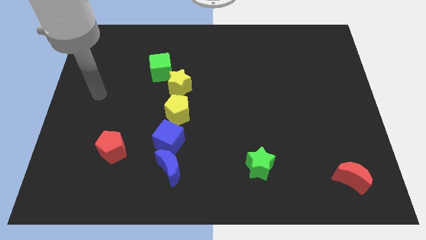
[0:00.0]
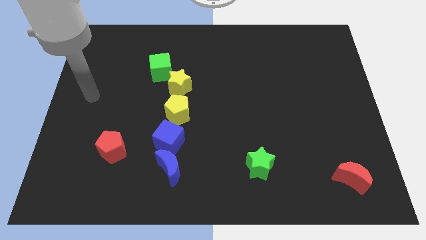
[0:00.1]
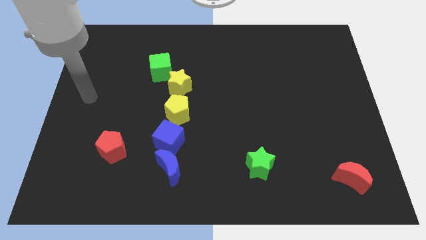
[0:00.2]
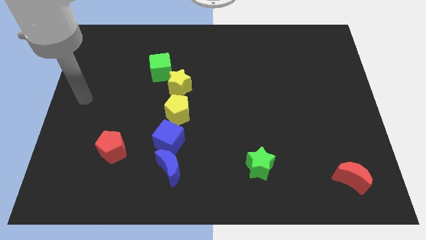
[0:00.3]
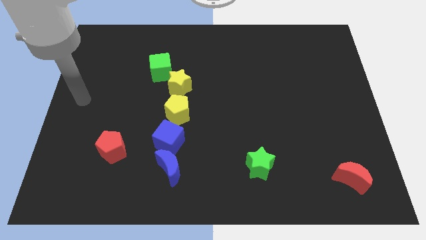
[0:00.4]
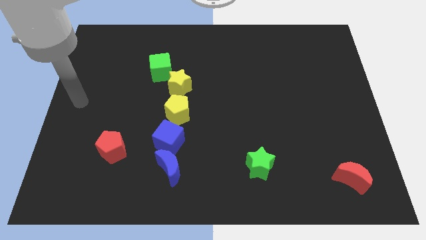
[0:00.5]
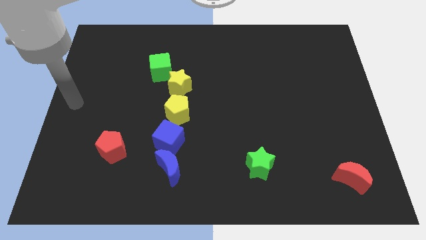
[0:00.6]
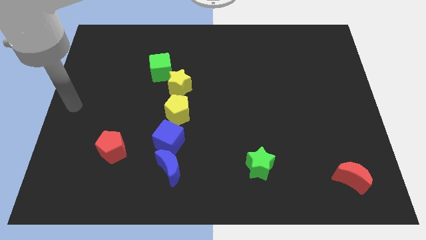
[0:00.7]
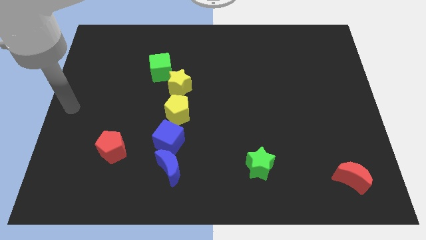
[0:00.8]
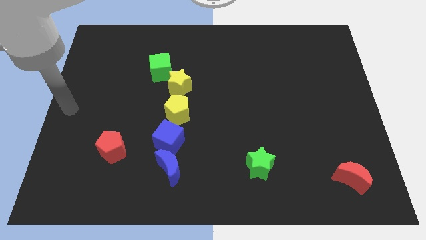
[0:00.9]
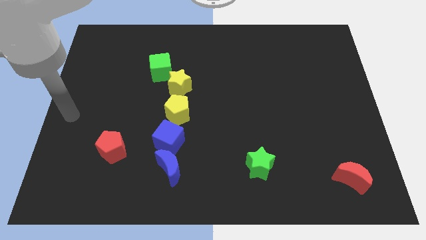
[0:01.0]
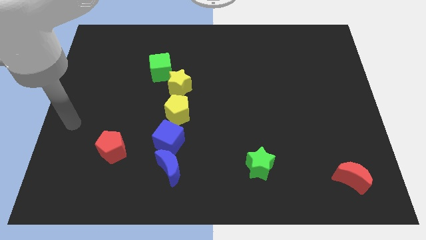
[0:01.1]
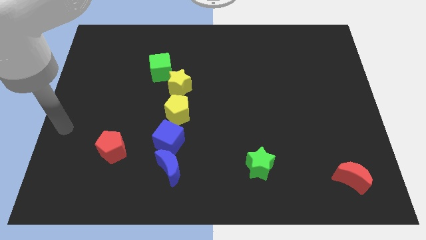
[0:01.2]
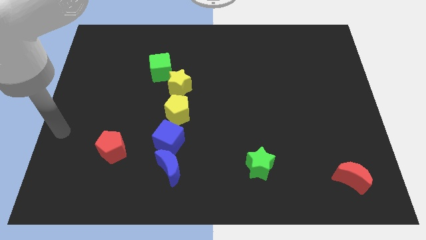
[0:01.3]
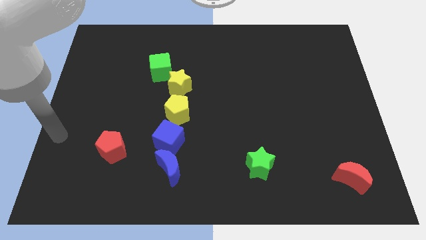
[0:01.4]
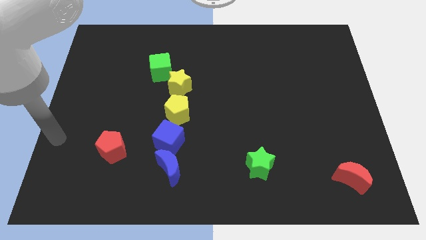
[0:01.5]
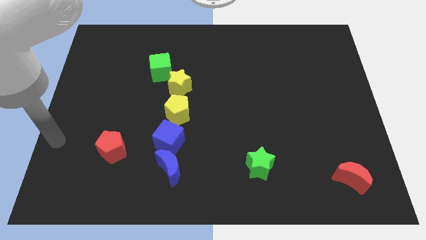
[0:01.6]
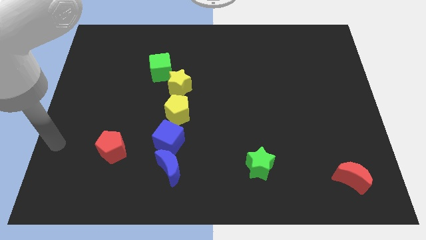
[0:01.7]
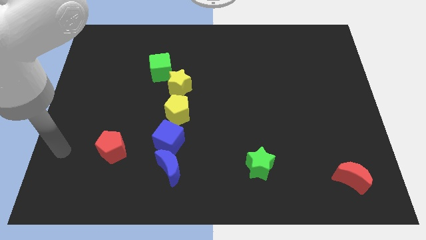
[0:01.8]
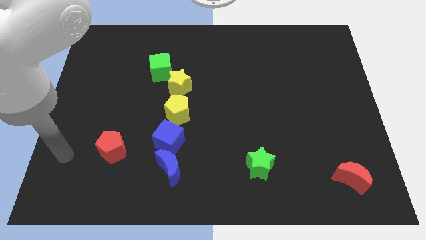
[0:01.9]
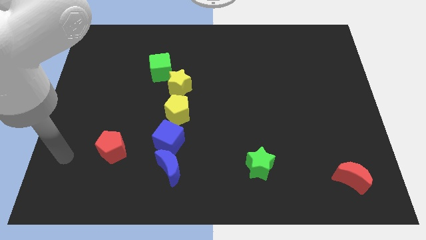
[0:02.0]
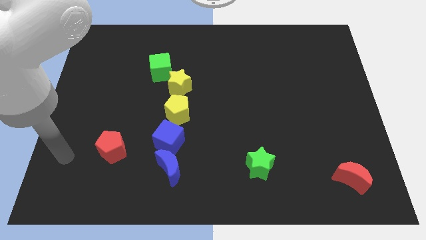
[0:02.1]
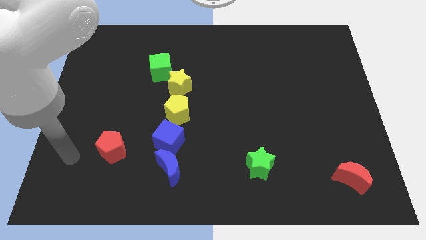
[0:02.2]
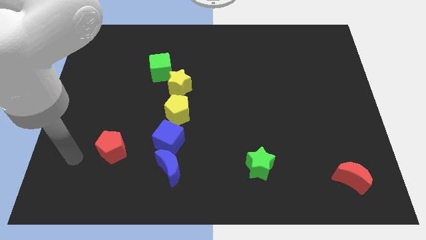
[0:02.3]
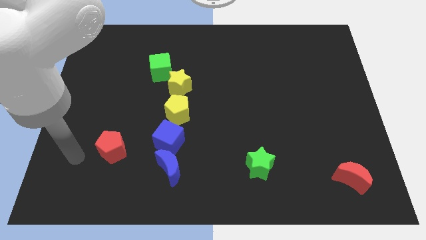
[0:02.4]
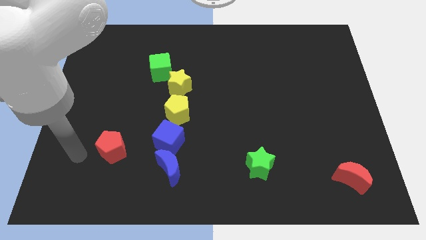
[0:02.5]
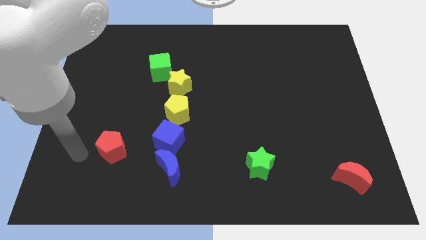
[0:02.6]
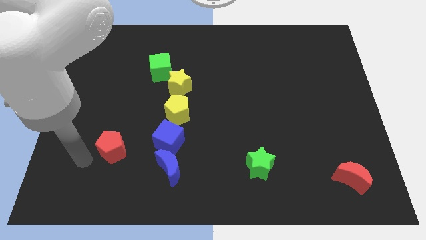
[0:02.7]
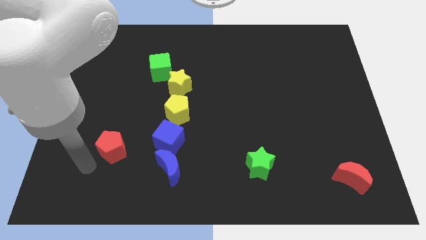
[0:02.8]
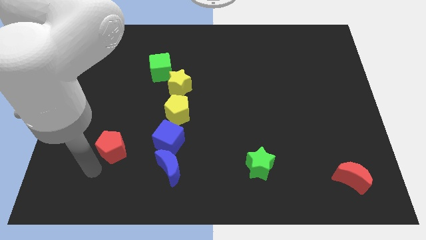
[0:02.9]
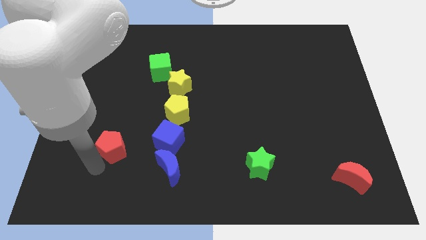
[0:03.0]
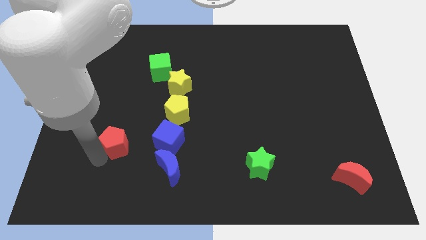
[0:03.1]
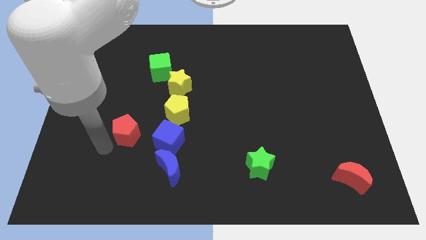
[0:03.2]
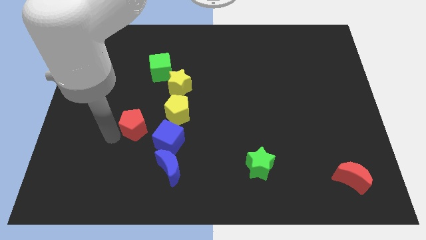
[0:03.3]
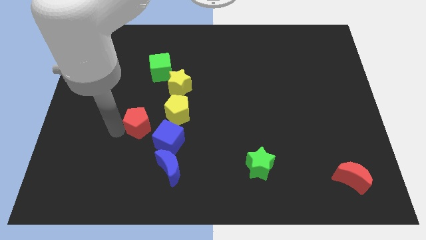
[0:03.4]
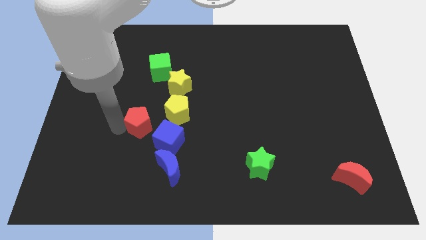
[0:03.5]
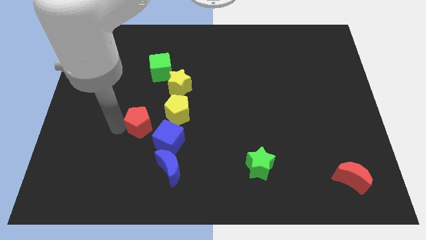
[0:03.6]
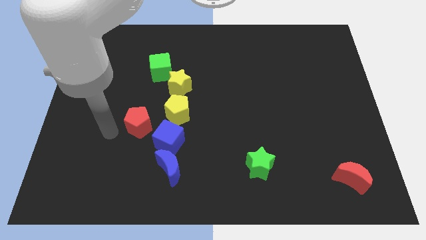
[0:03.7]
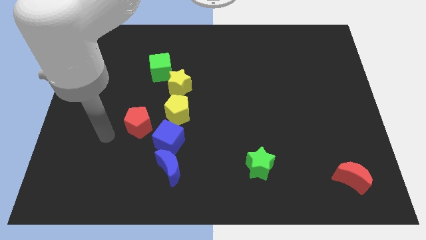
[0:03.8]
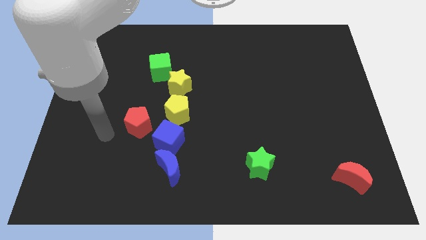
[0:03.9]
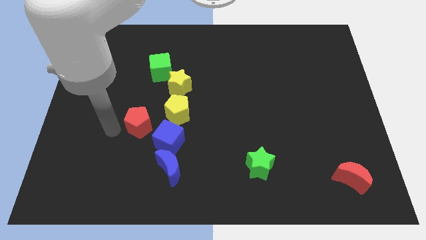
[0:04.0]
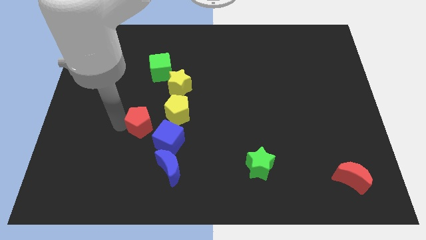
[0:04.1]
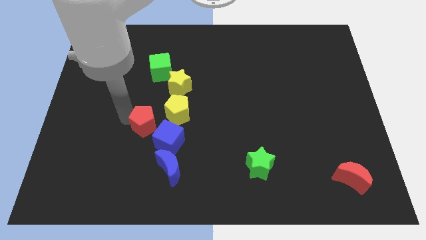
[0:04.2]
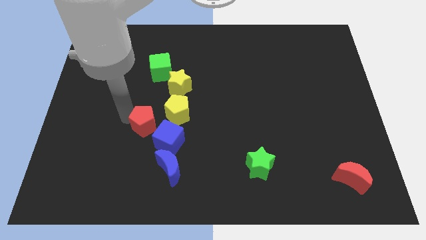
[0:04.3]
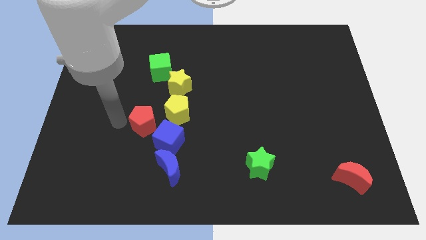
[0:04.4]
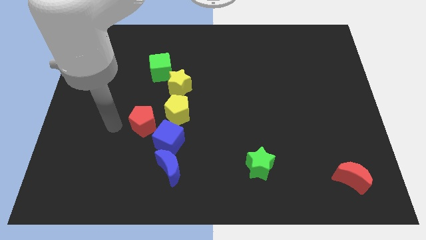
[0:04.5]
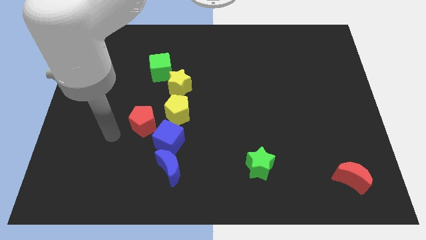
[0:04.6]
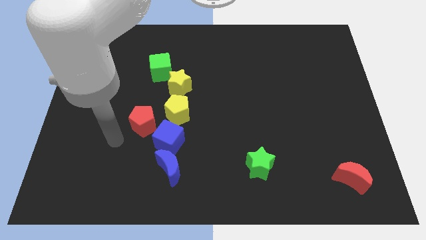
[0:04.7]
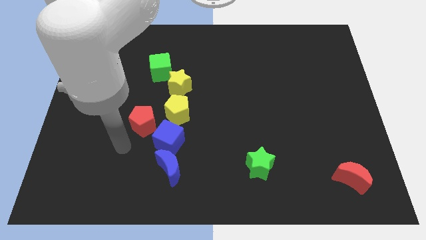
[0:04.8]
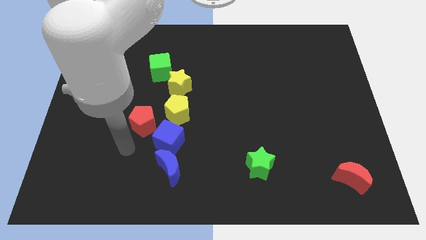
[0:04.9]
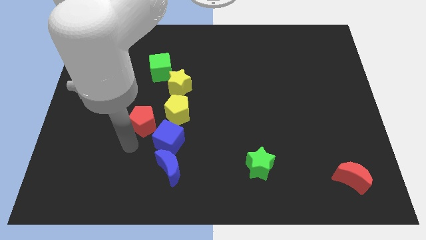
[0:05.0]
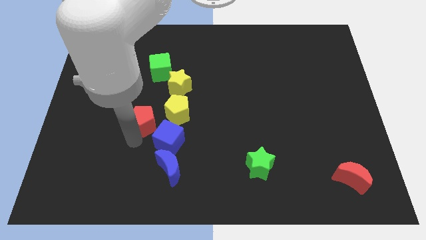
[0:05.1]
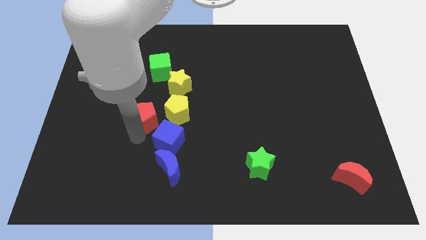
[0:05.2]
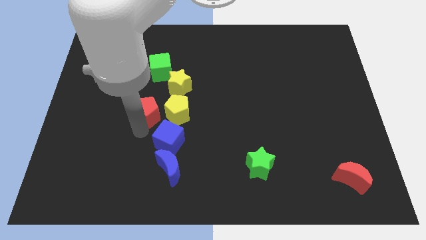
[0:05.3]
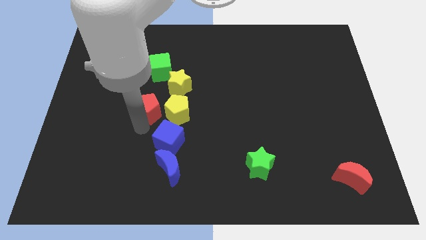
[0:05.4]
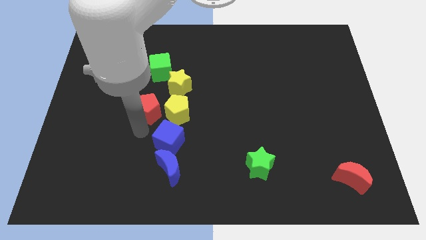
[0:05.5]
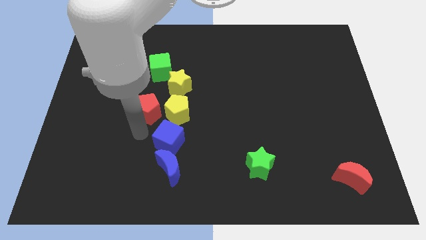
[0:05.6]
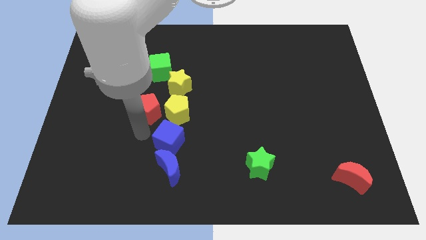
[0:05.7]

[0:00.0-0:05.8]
place the red pentagon left to the yellow pentagon

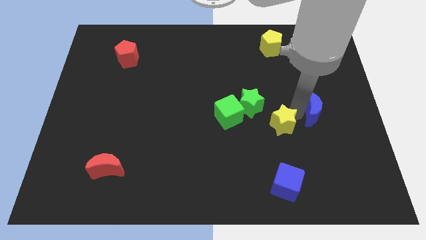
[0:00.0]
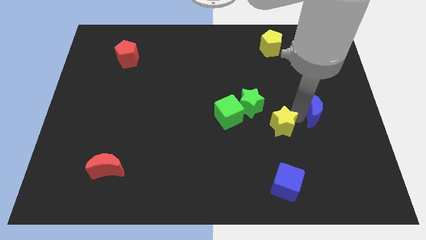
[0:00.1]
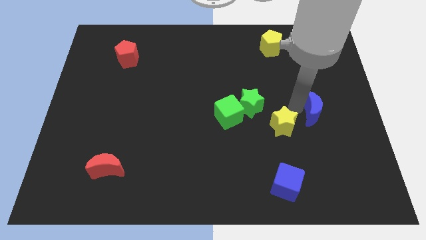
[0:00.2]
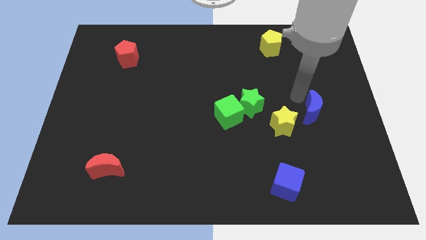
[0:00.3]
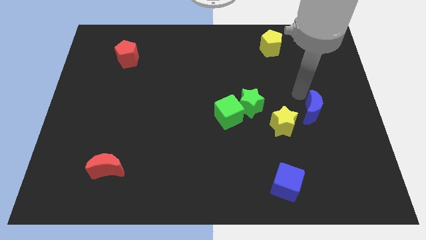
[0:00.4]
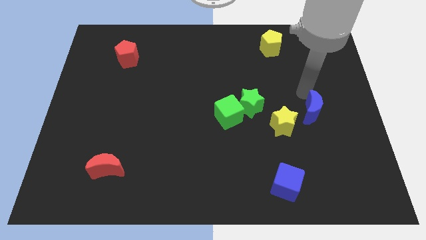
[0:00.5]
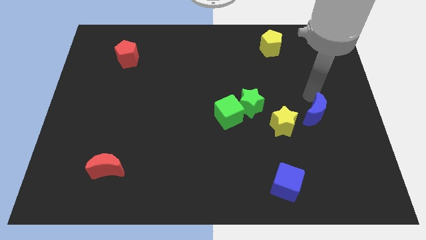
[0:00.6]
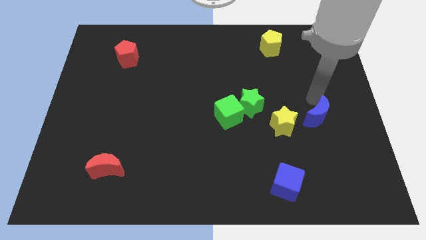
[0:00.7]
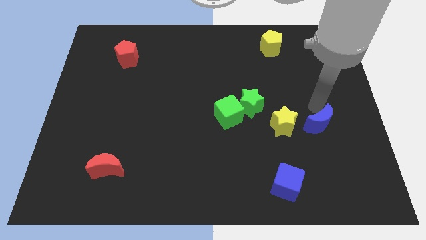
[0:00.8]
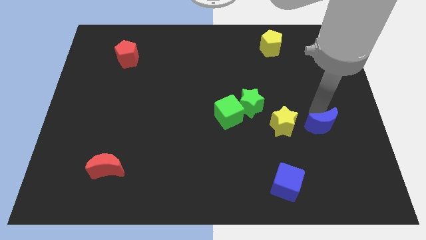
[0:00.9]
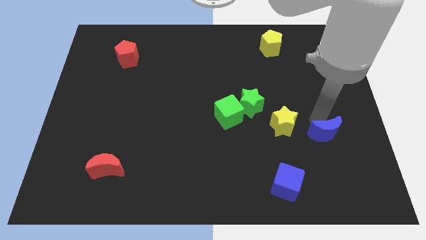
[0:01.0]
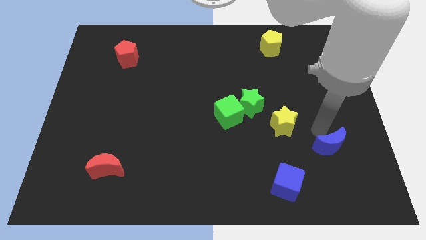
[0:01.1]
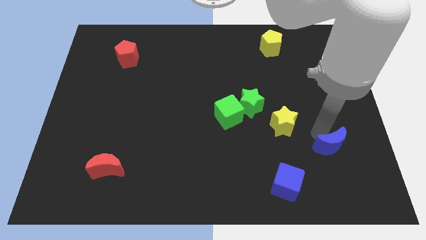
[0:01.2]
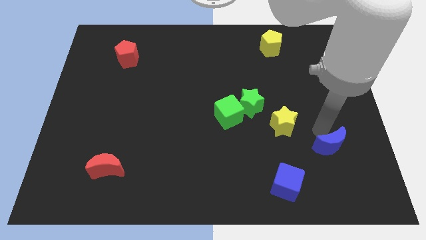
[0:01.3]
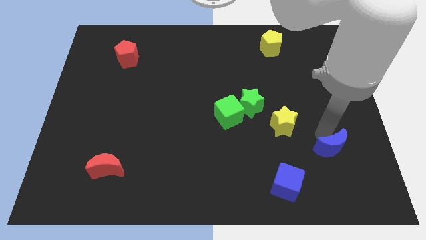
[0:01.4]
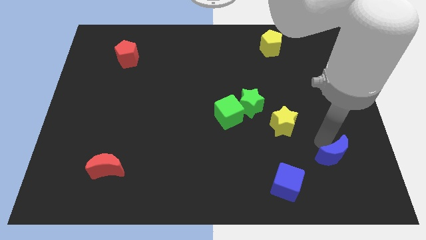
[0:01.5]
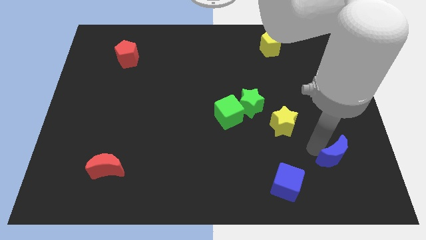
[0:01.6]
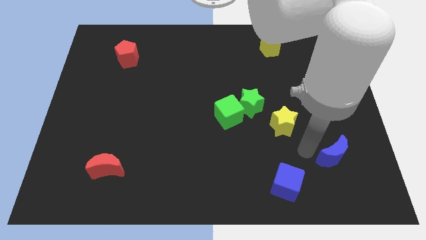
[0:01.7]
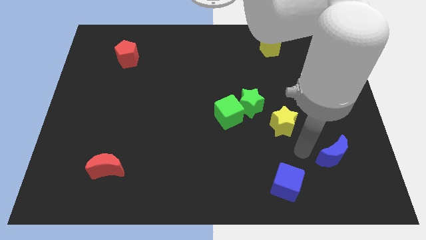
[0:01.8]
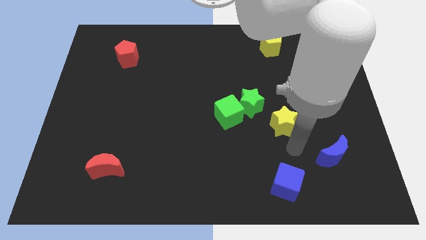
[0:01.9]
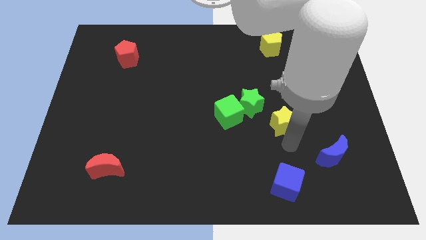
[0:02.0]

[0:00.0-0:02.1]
move blue crescent near to blue cube

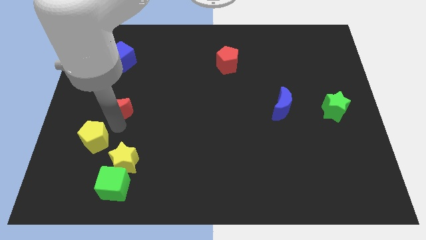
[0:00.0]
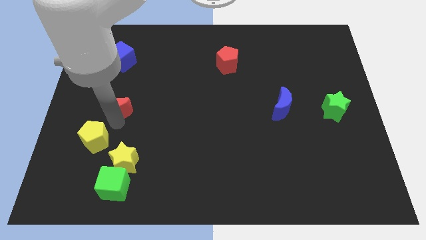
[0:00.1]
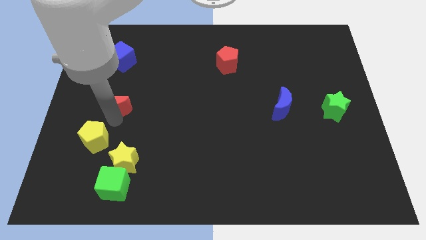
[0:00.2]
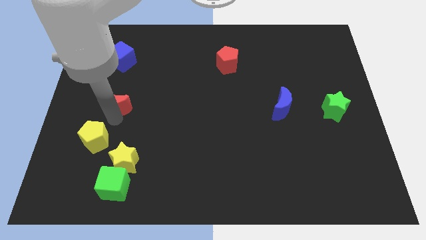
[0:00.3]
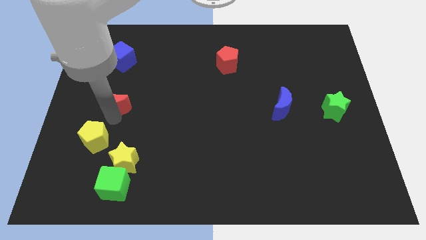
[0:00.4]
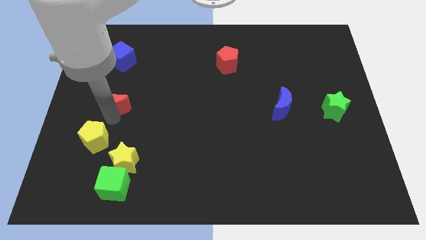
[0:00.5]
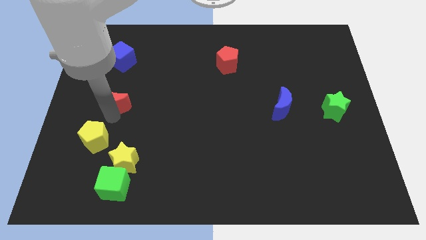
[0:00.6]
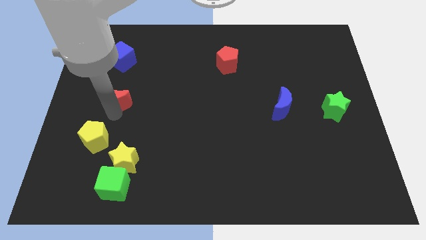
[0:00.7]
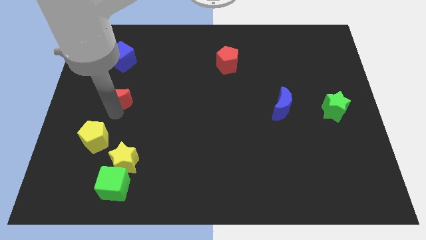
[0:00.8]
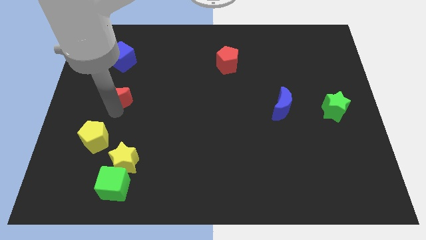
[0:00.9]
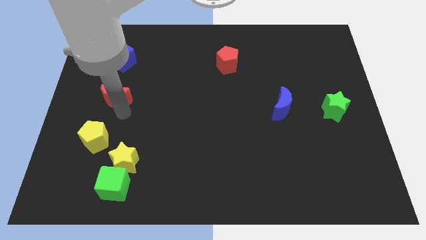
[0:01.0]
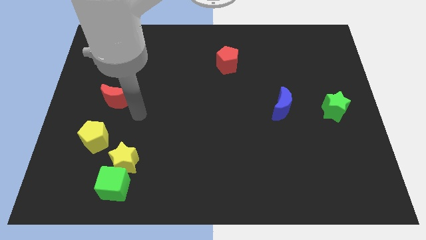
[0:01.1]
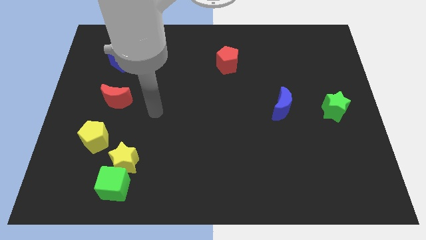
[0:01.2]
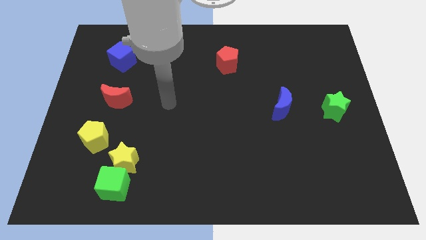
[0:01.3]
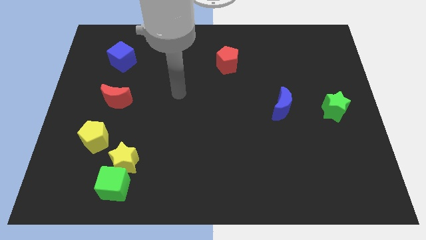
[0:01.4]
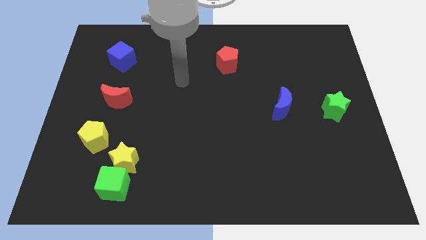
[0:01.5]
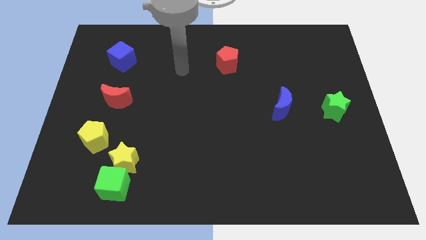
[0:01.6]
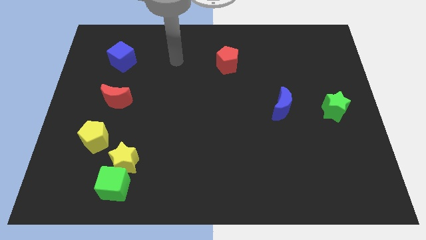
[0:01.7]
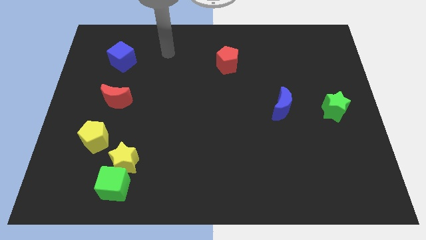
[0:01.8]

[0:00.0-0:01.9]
move the red crescent to the top of the board
